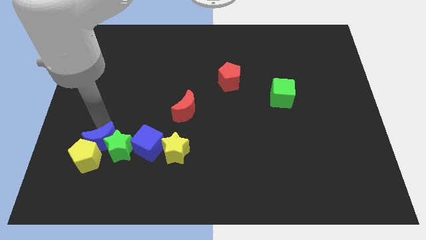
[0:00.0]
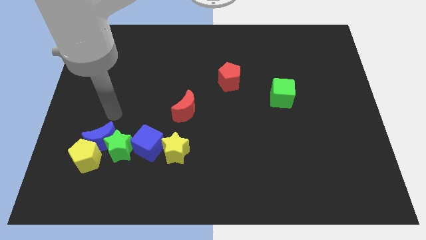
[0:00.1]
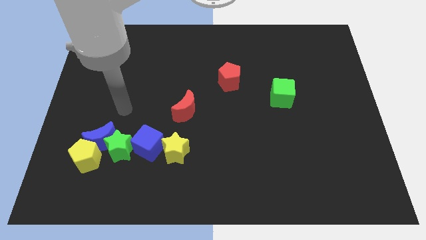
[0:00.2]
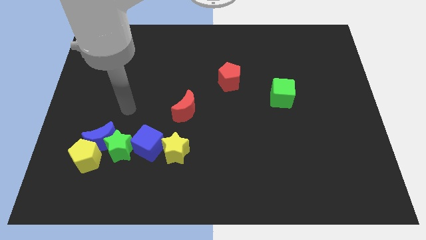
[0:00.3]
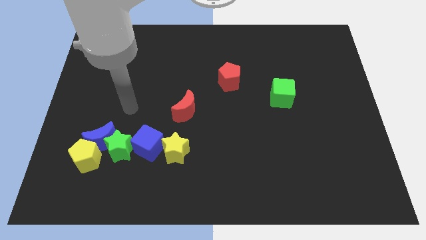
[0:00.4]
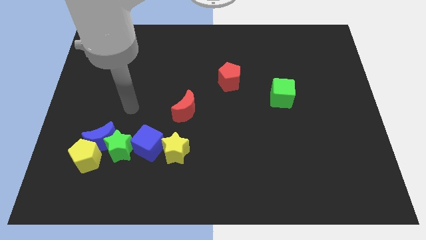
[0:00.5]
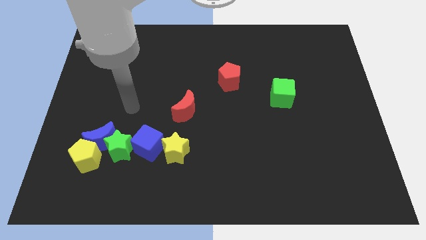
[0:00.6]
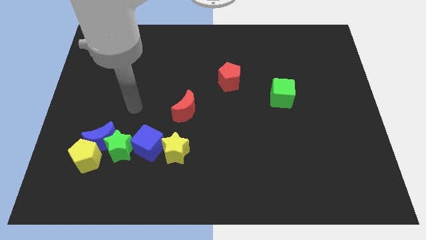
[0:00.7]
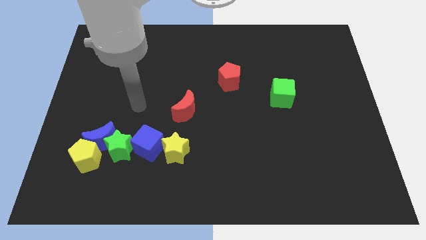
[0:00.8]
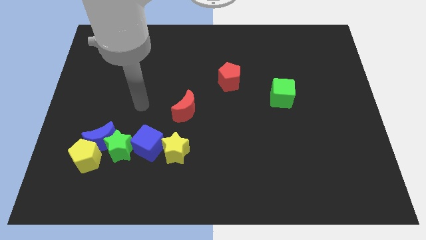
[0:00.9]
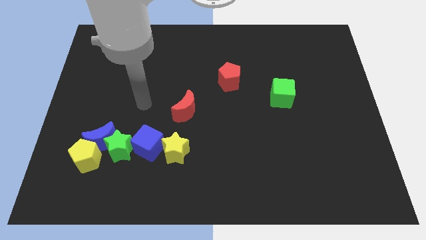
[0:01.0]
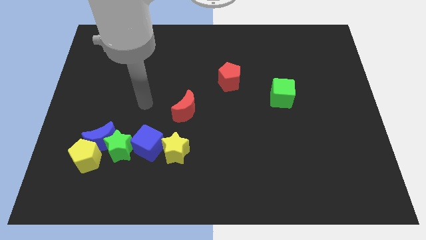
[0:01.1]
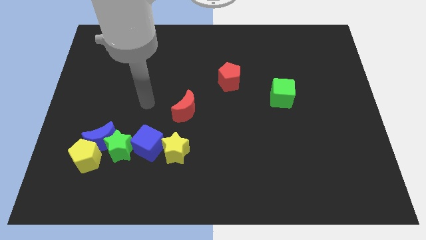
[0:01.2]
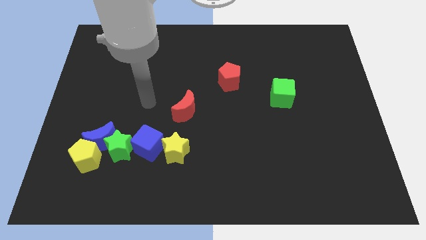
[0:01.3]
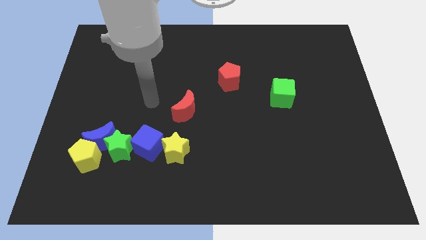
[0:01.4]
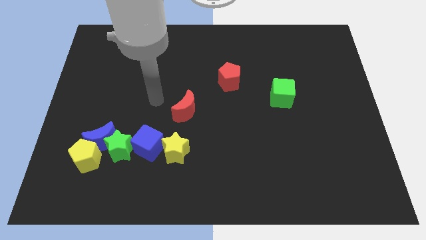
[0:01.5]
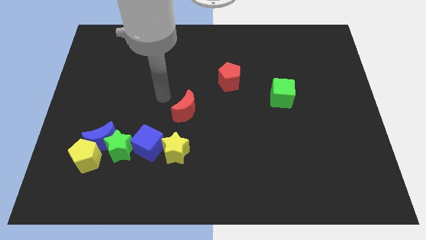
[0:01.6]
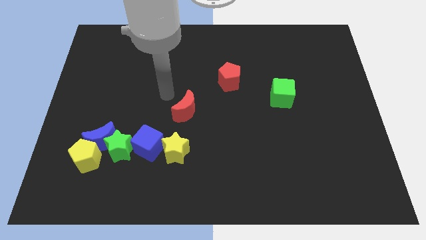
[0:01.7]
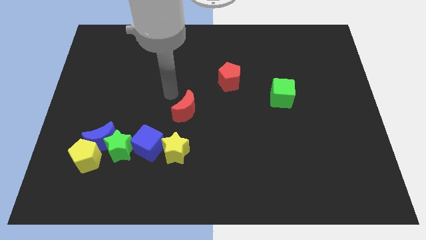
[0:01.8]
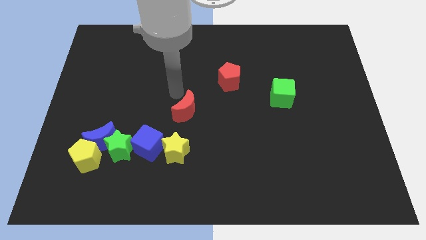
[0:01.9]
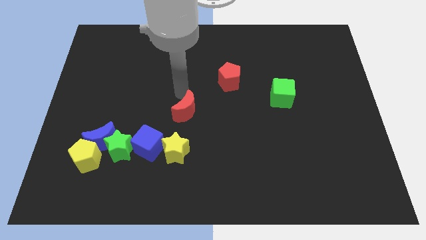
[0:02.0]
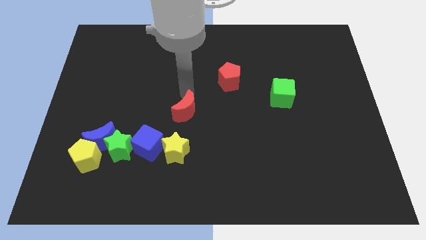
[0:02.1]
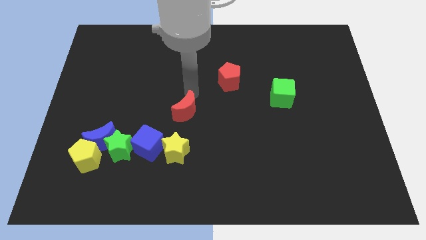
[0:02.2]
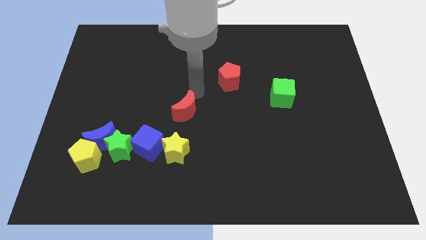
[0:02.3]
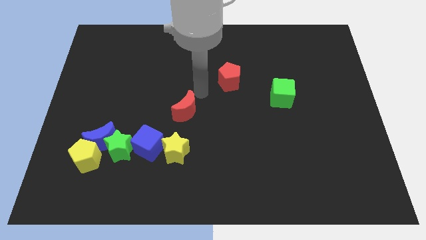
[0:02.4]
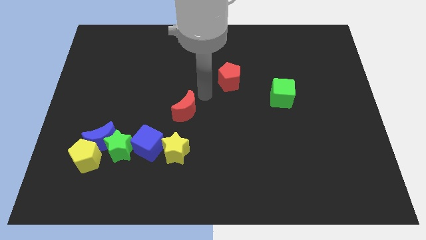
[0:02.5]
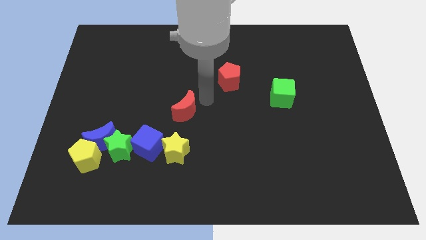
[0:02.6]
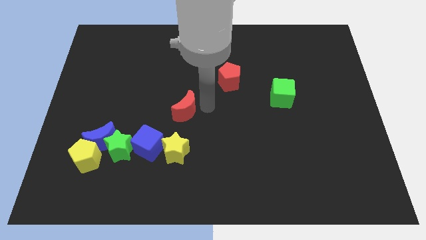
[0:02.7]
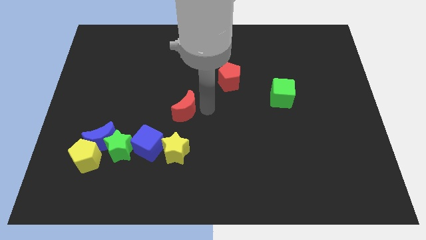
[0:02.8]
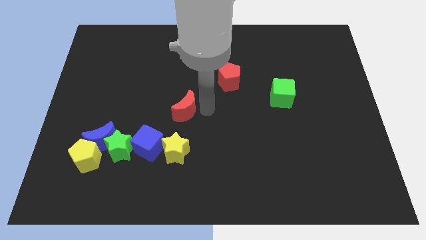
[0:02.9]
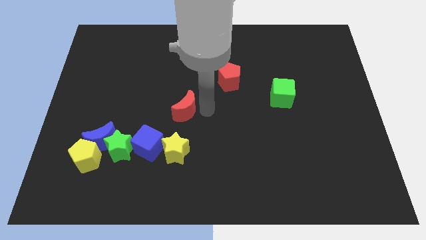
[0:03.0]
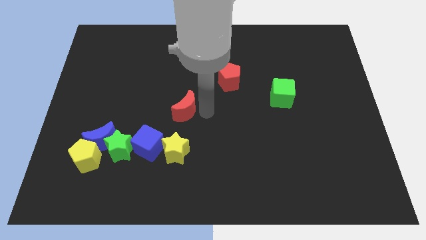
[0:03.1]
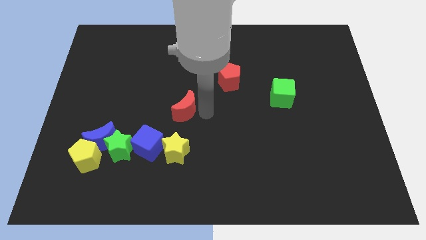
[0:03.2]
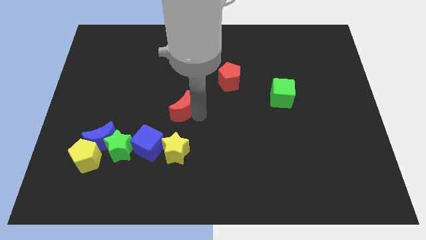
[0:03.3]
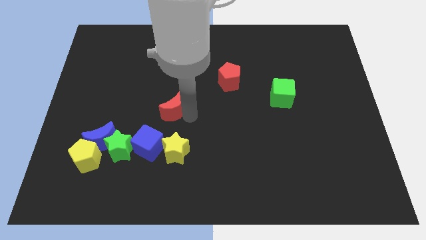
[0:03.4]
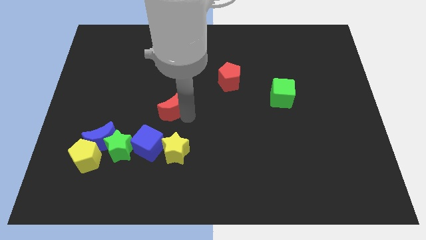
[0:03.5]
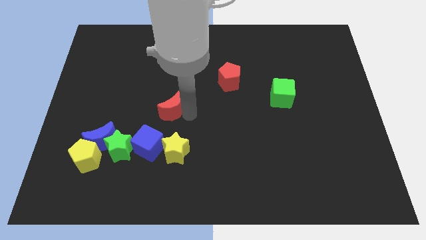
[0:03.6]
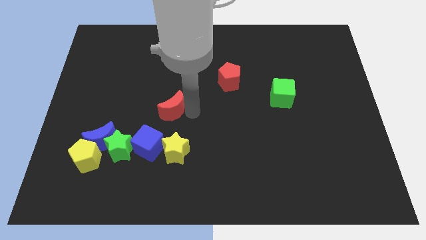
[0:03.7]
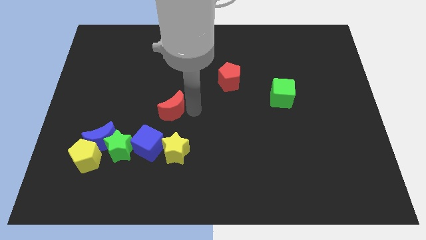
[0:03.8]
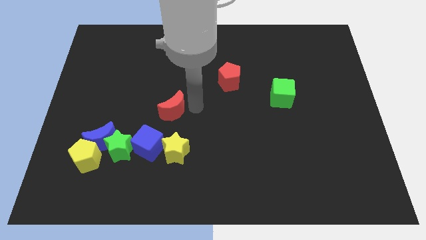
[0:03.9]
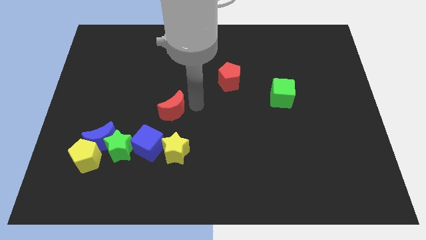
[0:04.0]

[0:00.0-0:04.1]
slightly push the red crescent towards the left side of the board

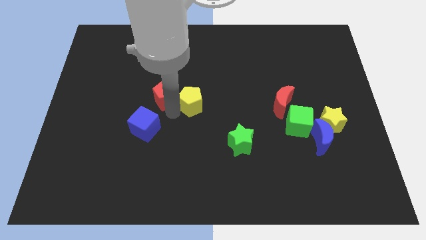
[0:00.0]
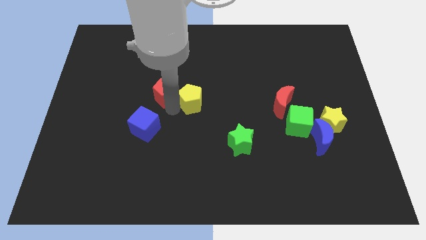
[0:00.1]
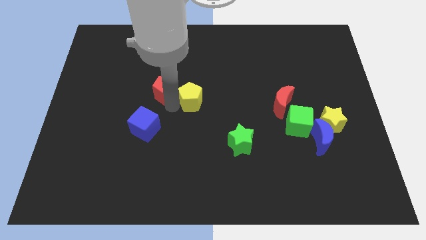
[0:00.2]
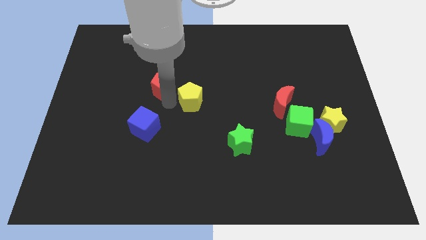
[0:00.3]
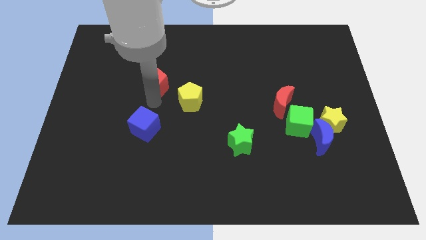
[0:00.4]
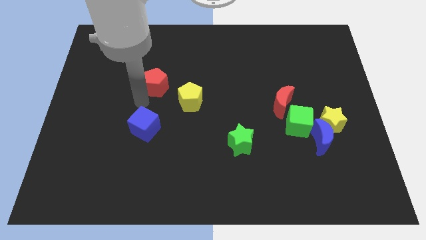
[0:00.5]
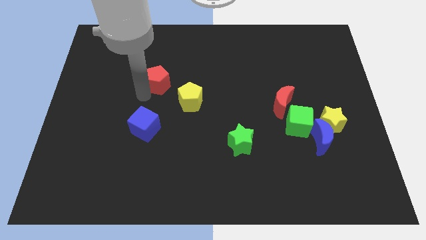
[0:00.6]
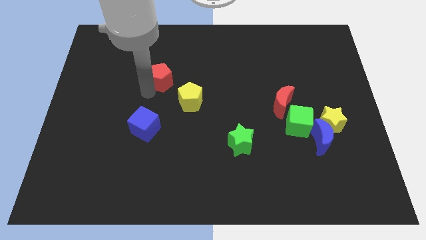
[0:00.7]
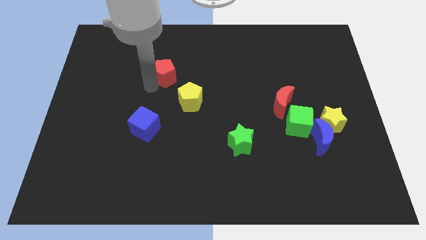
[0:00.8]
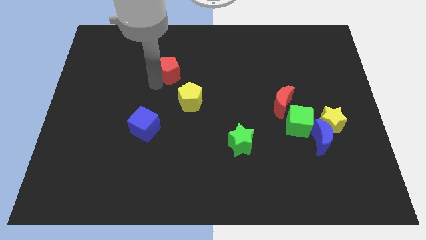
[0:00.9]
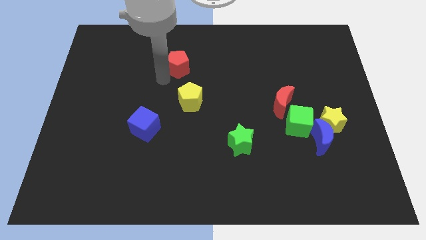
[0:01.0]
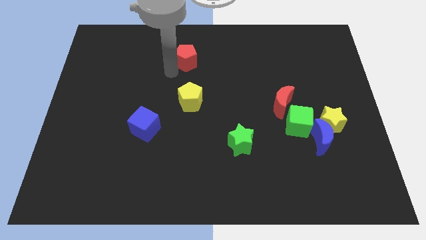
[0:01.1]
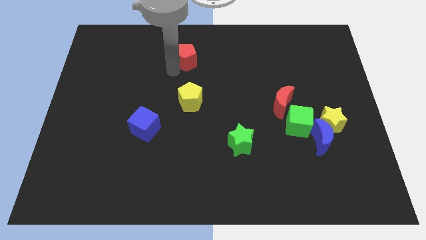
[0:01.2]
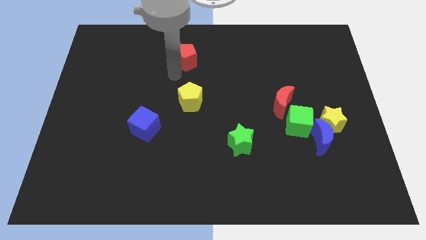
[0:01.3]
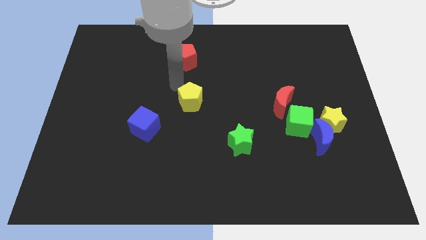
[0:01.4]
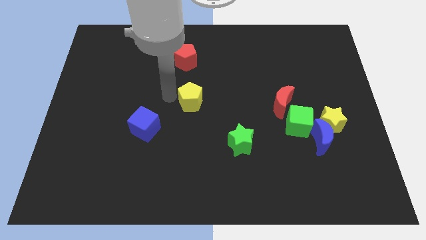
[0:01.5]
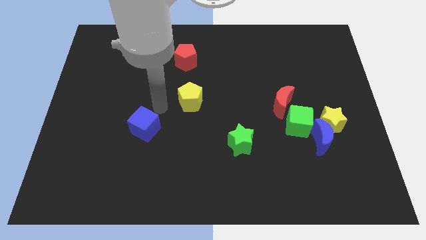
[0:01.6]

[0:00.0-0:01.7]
place red pentagon above yellow pentagon

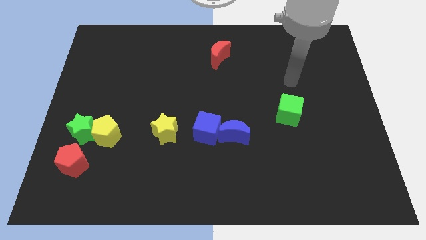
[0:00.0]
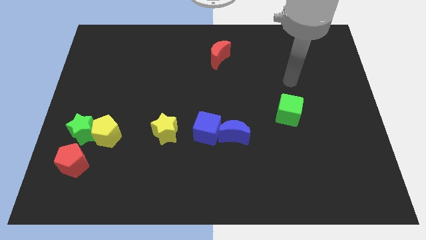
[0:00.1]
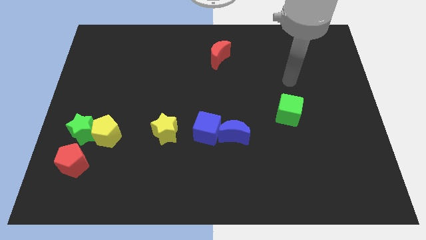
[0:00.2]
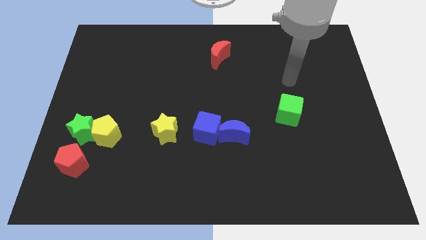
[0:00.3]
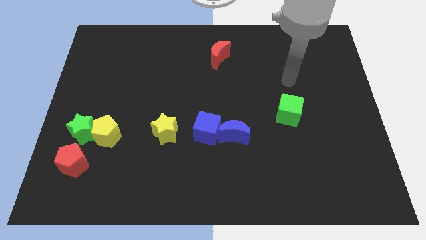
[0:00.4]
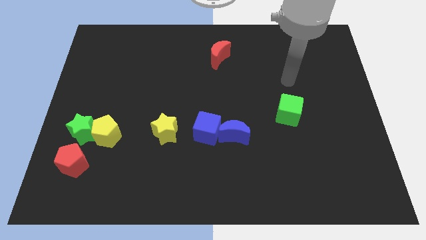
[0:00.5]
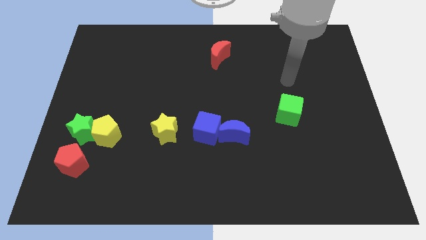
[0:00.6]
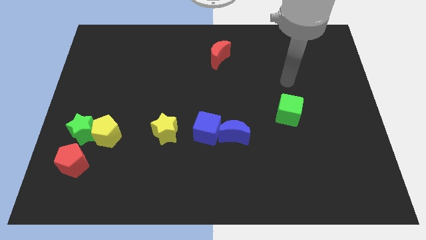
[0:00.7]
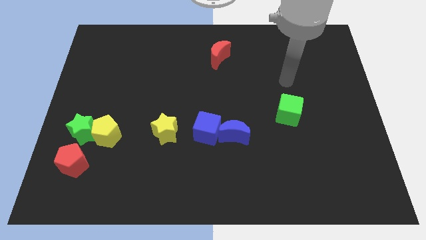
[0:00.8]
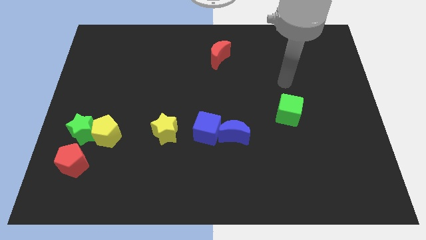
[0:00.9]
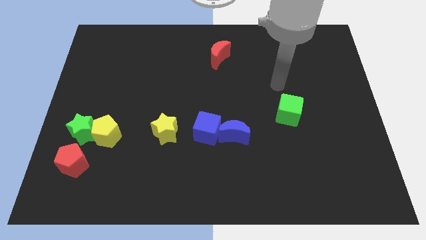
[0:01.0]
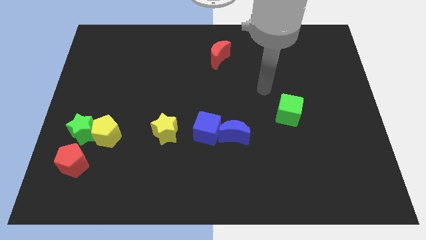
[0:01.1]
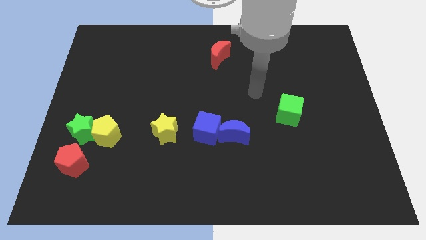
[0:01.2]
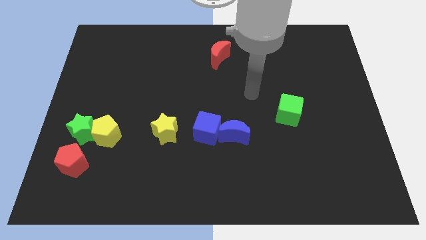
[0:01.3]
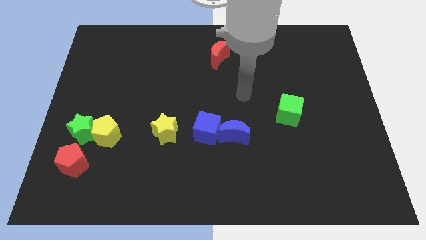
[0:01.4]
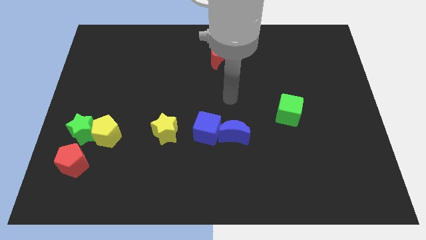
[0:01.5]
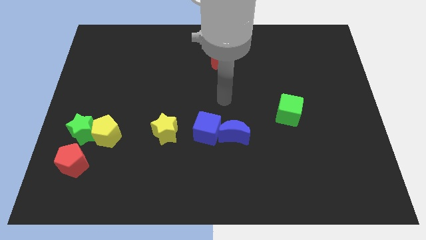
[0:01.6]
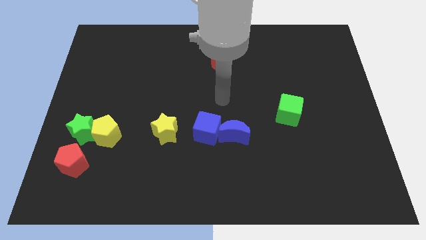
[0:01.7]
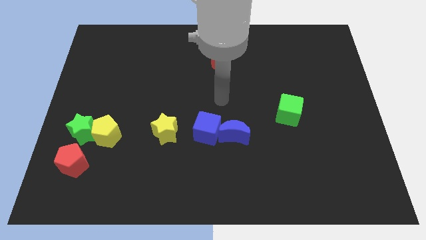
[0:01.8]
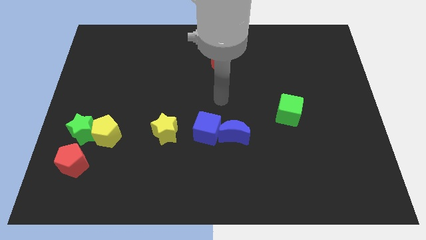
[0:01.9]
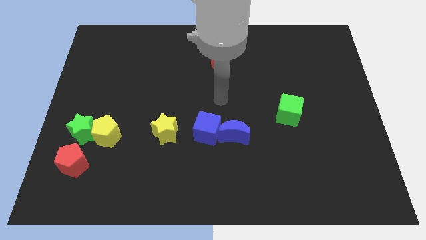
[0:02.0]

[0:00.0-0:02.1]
point your arm above blue cube

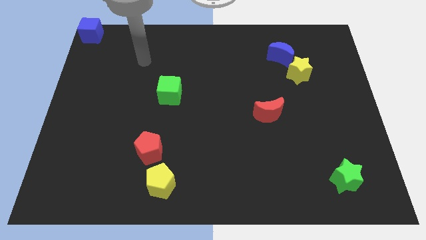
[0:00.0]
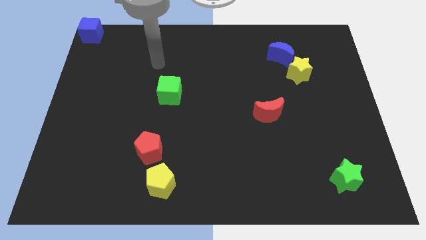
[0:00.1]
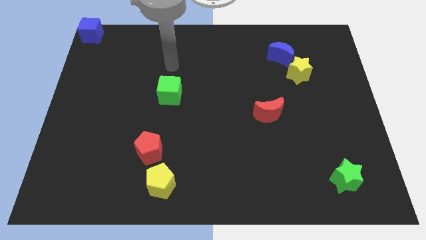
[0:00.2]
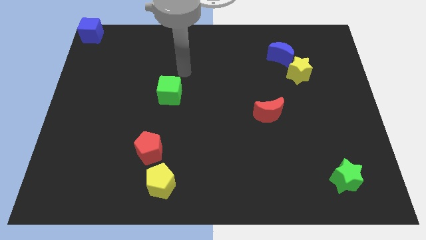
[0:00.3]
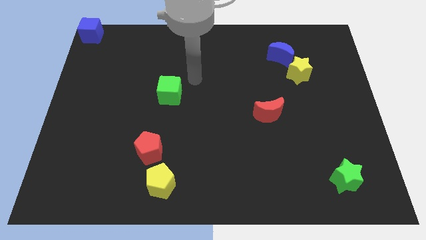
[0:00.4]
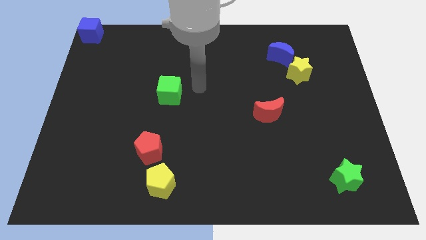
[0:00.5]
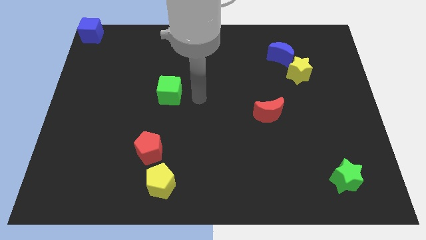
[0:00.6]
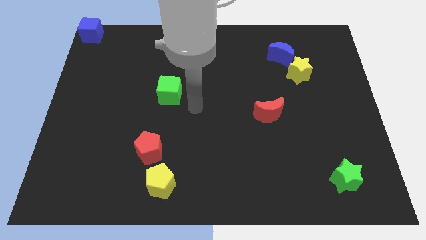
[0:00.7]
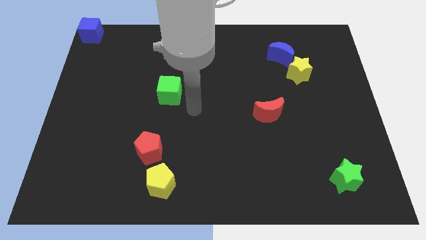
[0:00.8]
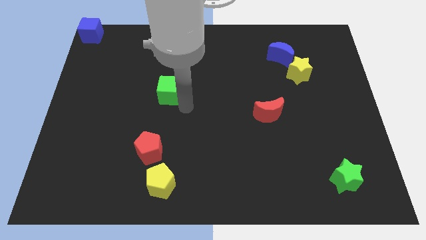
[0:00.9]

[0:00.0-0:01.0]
place the arm diagonally to the green cube
